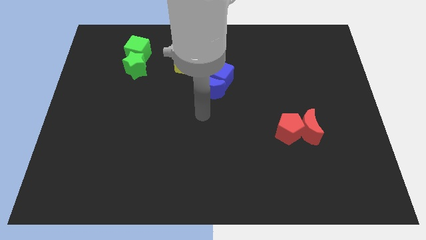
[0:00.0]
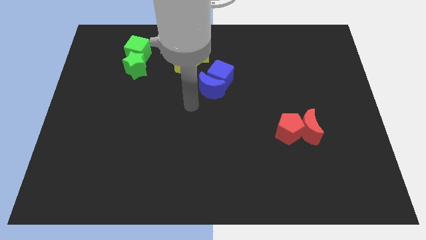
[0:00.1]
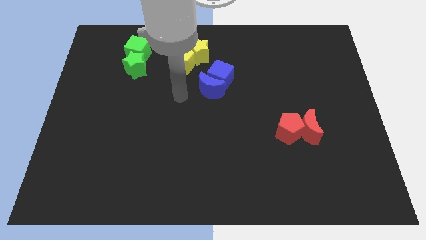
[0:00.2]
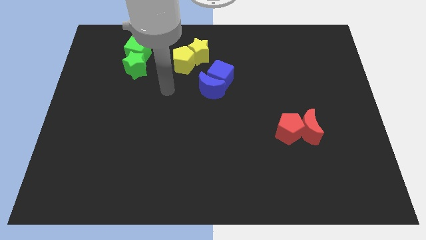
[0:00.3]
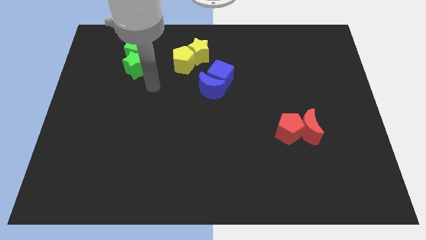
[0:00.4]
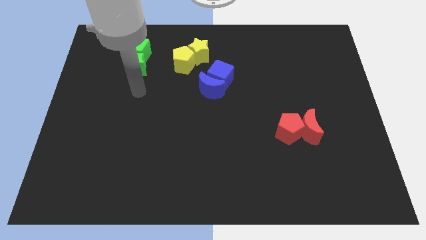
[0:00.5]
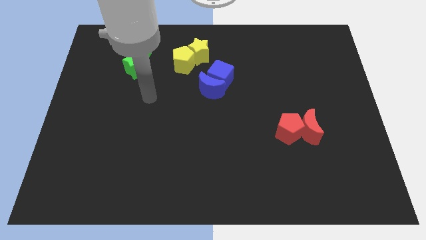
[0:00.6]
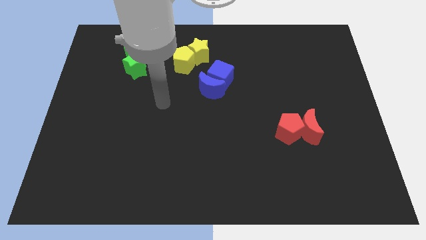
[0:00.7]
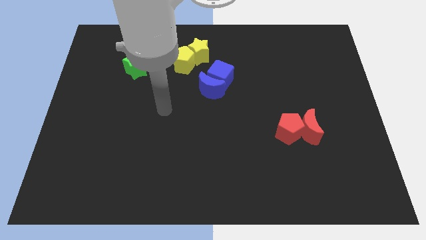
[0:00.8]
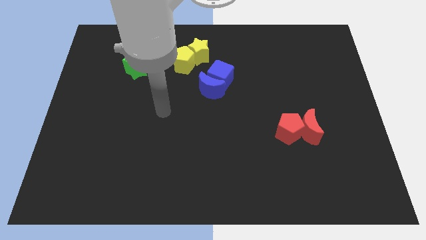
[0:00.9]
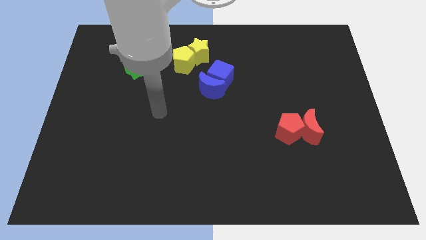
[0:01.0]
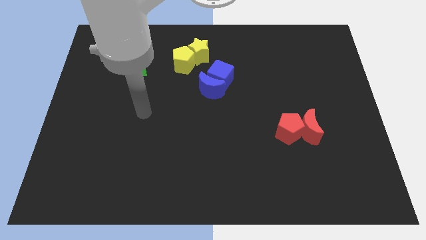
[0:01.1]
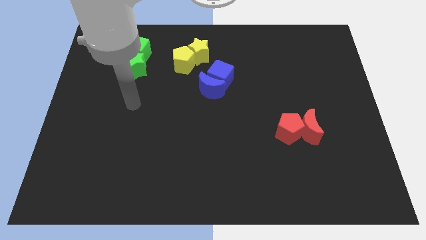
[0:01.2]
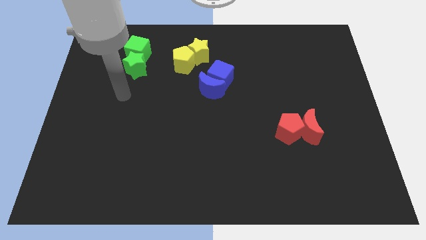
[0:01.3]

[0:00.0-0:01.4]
point the arm below the green star

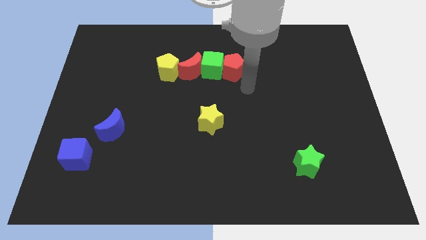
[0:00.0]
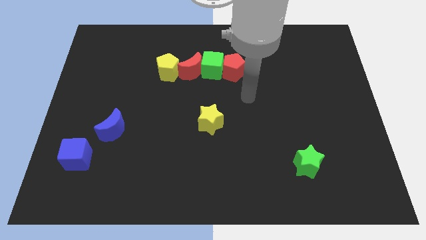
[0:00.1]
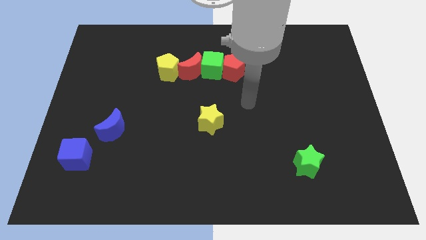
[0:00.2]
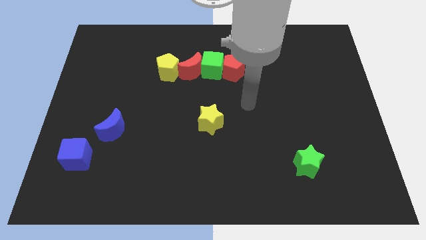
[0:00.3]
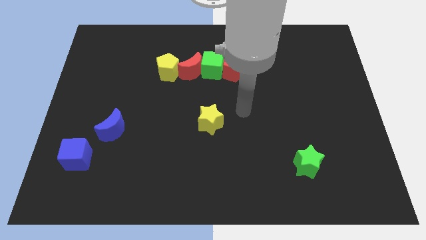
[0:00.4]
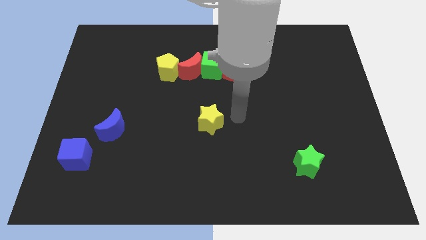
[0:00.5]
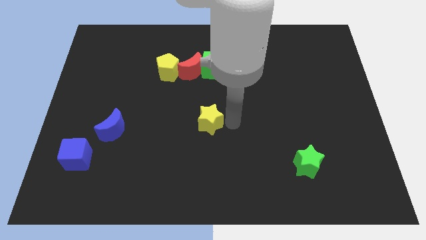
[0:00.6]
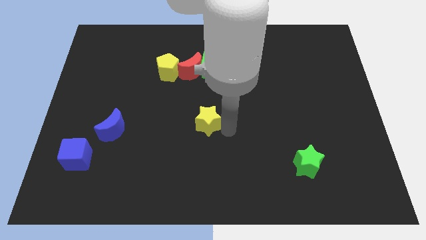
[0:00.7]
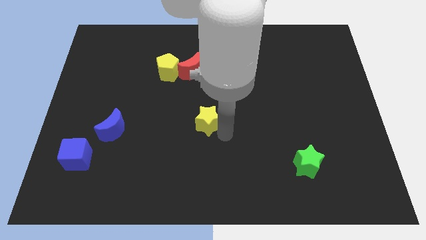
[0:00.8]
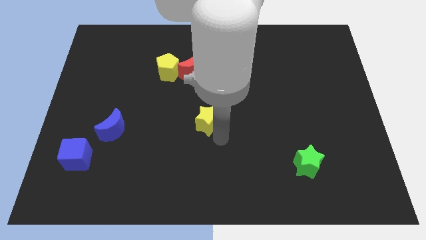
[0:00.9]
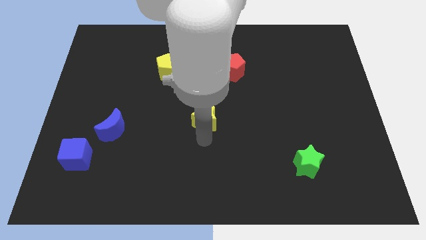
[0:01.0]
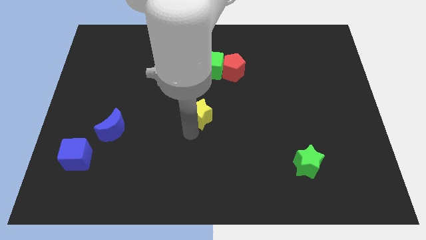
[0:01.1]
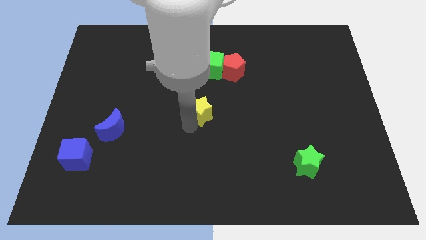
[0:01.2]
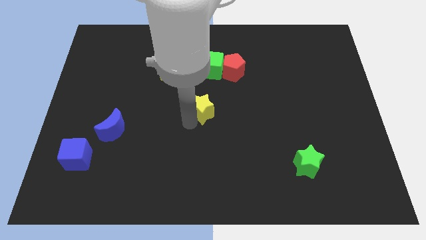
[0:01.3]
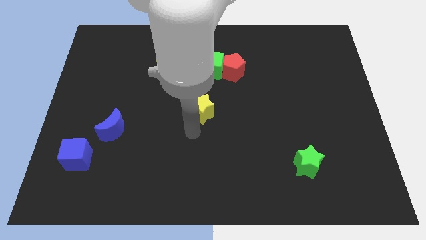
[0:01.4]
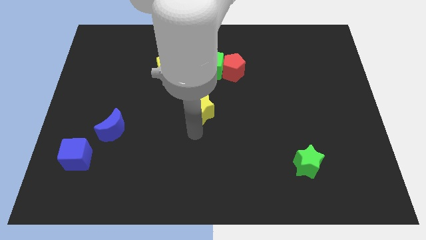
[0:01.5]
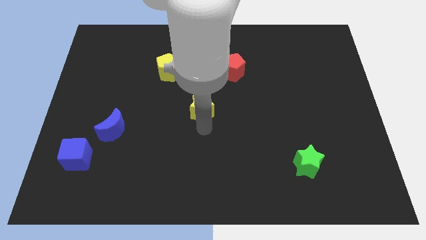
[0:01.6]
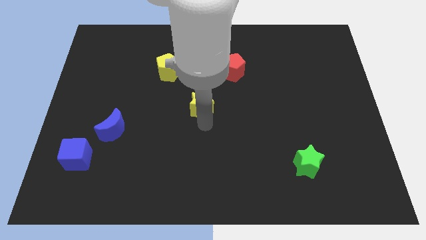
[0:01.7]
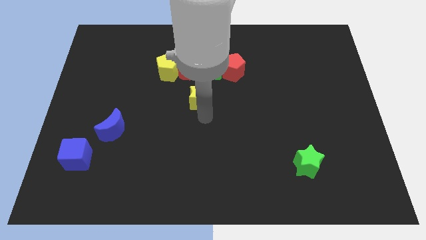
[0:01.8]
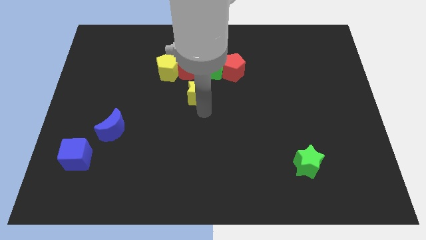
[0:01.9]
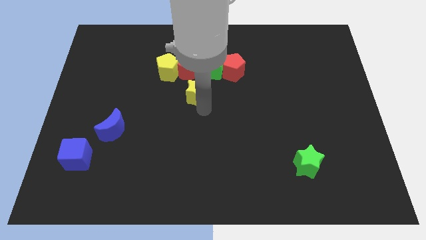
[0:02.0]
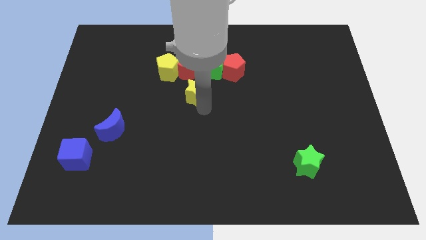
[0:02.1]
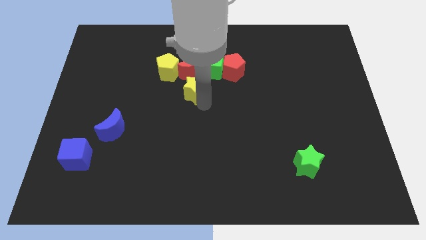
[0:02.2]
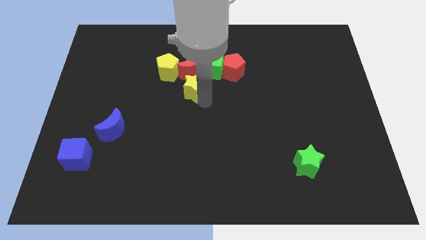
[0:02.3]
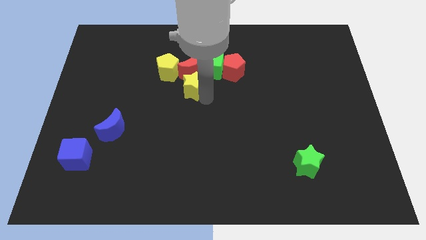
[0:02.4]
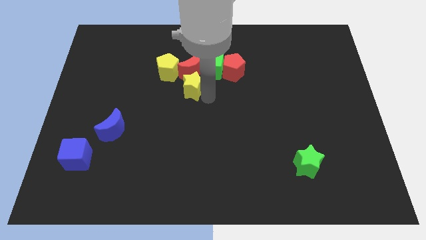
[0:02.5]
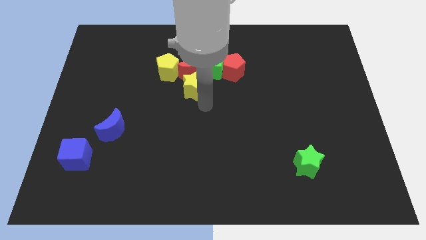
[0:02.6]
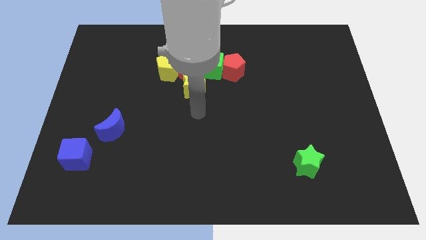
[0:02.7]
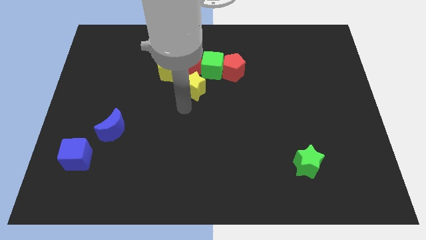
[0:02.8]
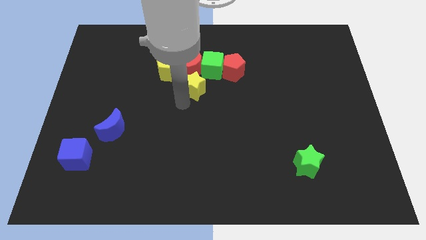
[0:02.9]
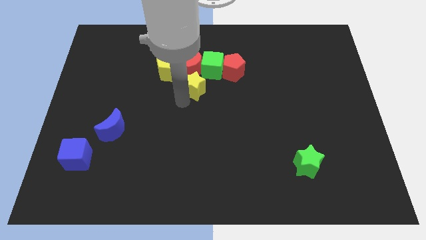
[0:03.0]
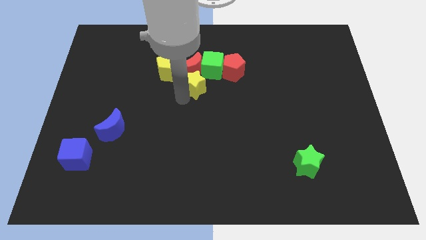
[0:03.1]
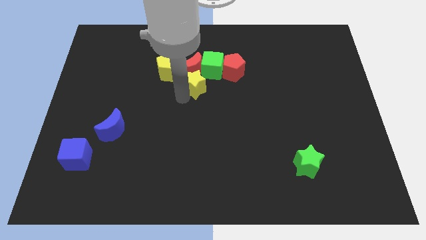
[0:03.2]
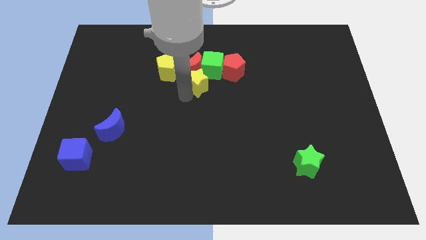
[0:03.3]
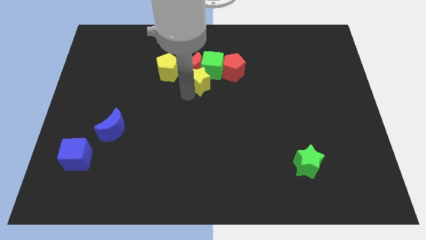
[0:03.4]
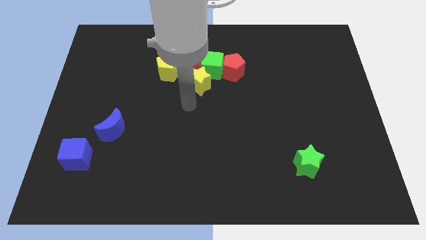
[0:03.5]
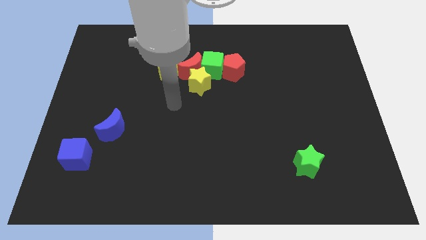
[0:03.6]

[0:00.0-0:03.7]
move the yellow star towards the horizontal line of blocks

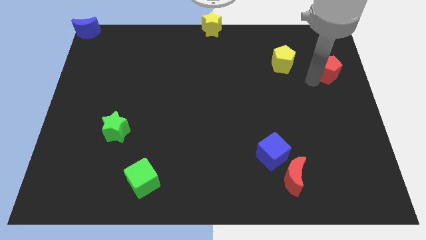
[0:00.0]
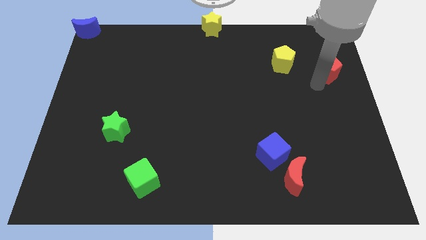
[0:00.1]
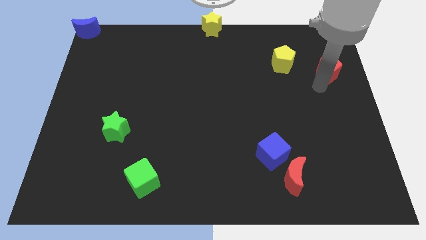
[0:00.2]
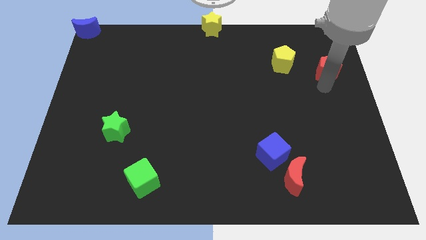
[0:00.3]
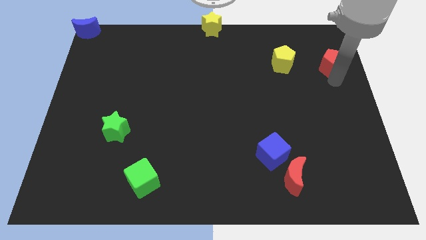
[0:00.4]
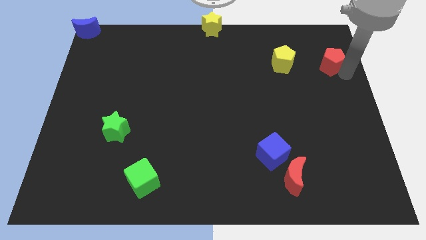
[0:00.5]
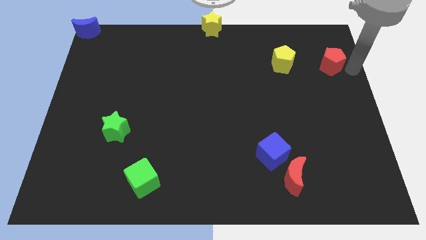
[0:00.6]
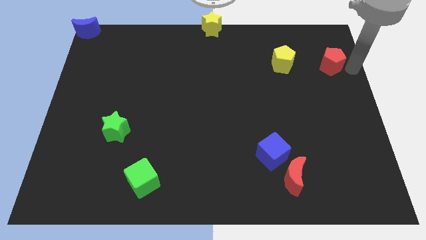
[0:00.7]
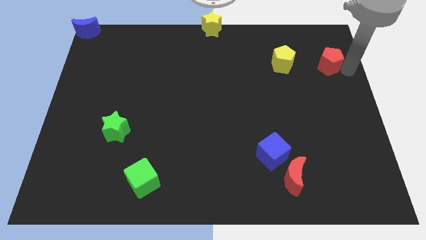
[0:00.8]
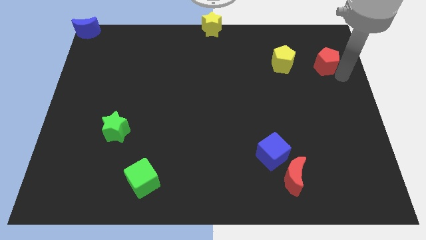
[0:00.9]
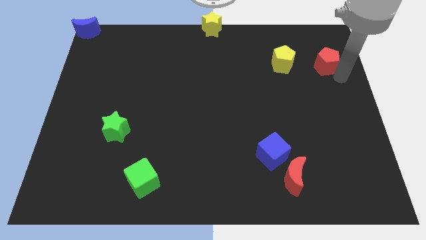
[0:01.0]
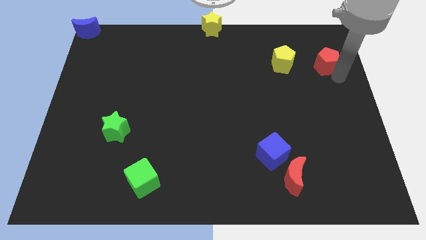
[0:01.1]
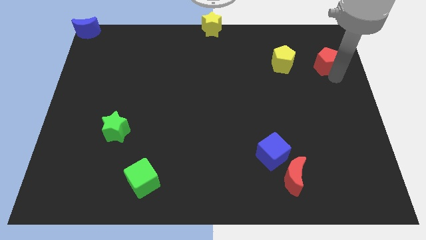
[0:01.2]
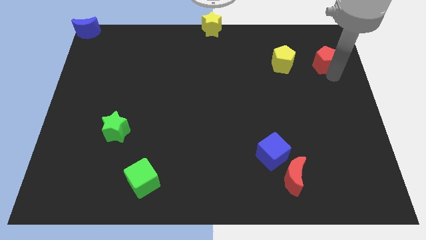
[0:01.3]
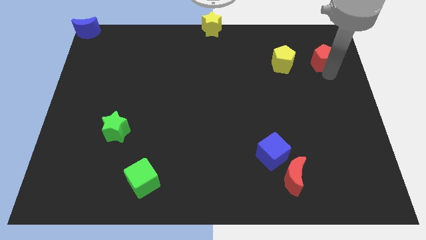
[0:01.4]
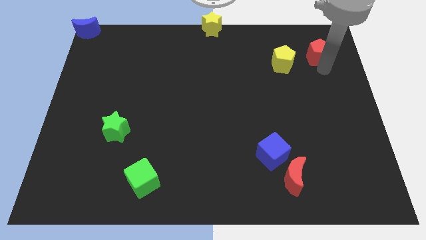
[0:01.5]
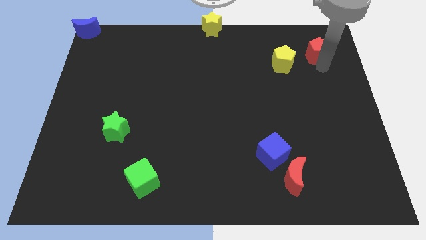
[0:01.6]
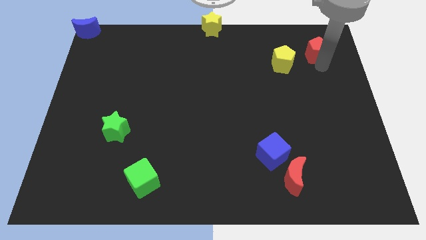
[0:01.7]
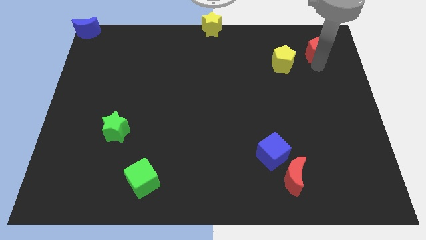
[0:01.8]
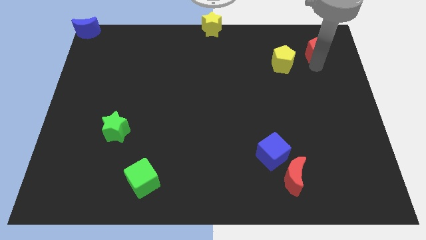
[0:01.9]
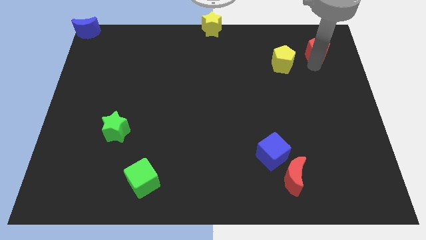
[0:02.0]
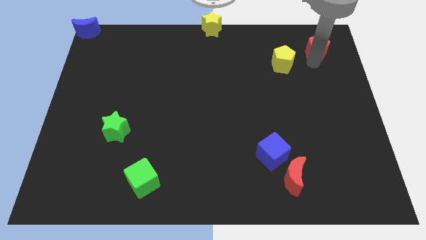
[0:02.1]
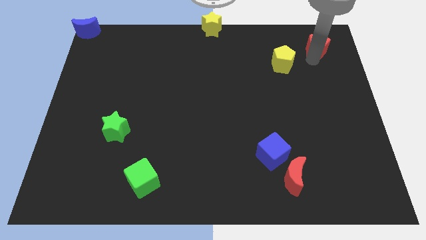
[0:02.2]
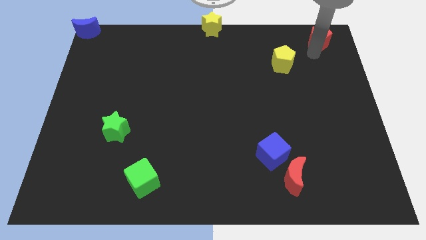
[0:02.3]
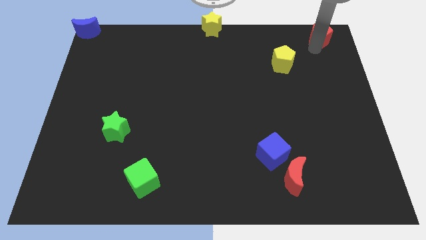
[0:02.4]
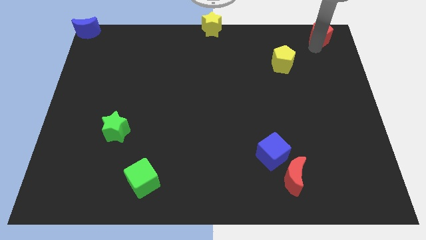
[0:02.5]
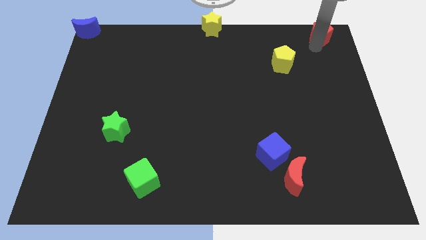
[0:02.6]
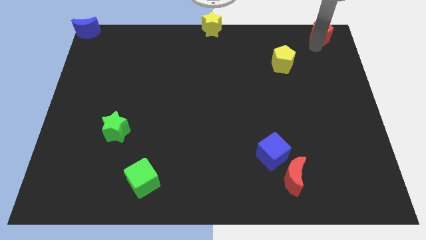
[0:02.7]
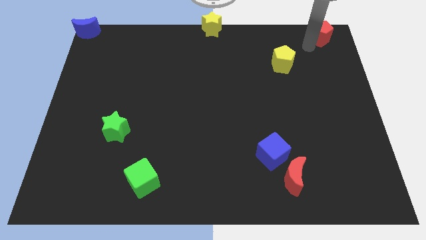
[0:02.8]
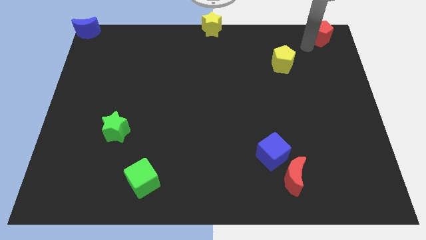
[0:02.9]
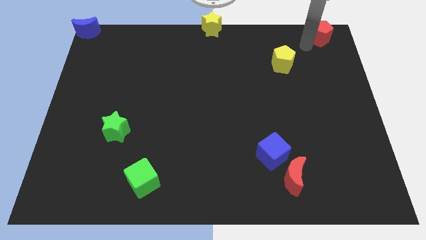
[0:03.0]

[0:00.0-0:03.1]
move red pentagon towards top right

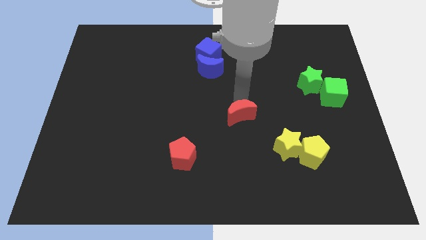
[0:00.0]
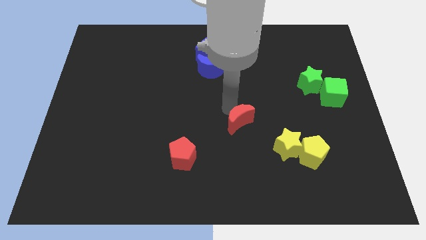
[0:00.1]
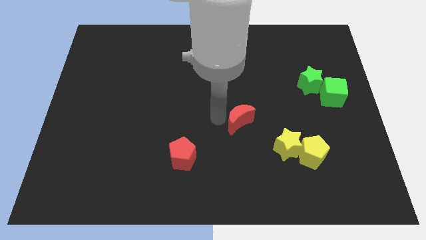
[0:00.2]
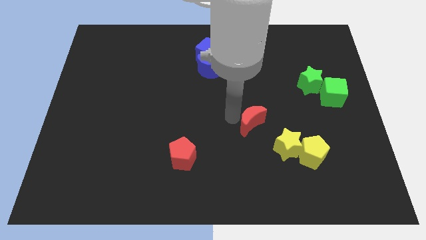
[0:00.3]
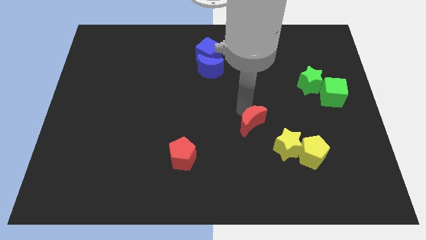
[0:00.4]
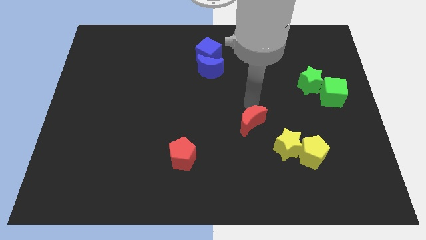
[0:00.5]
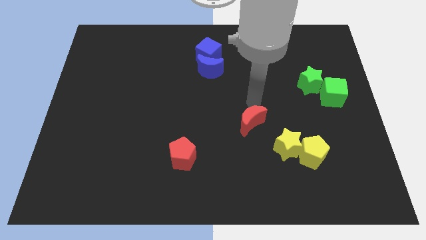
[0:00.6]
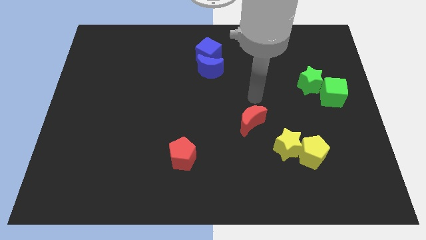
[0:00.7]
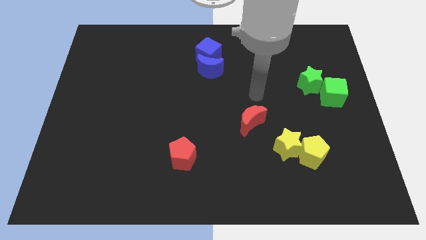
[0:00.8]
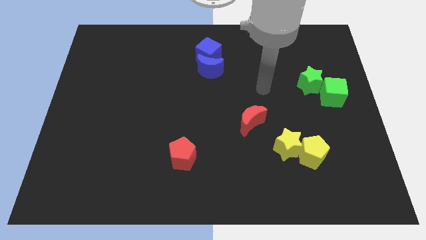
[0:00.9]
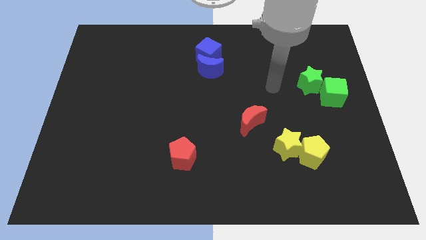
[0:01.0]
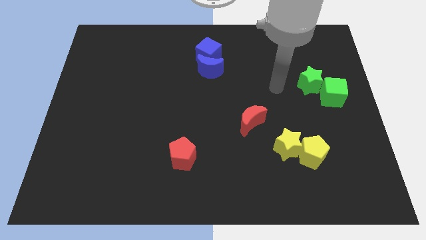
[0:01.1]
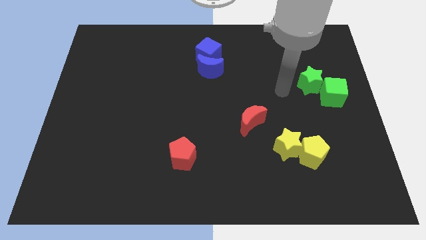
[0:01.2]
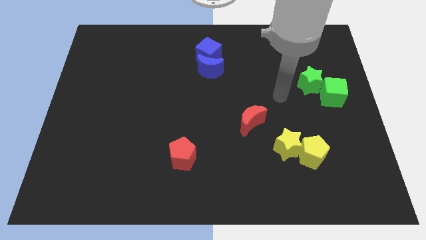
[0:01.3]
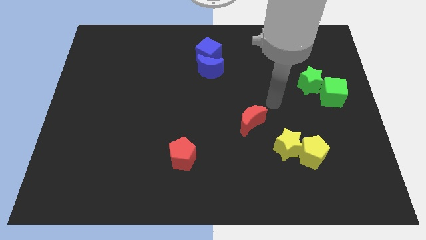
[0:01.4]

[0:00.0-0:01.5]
move the red crescent towards the red pentagon
